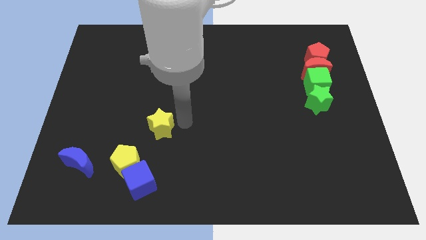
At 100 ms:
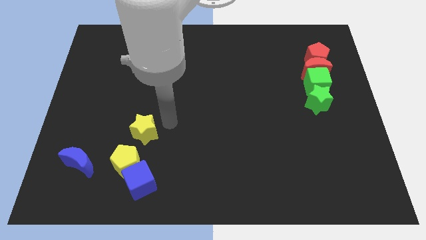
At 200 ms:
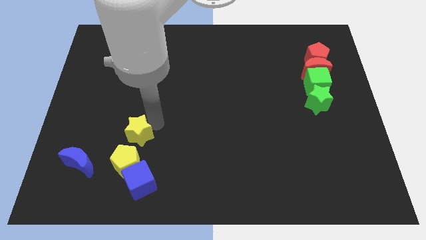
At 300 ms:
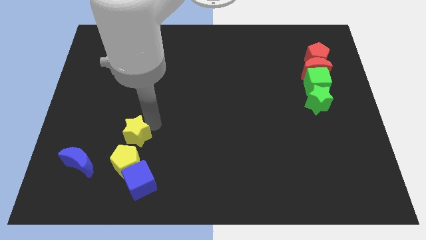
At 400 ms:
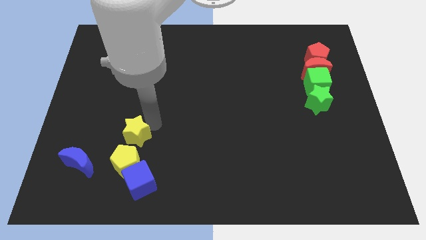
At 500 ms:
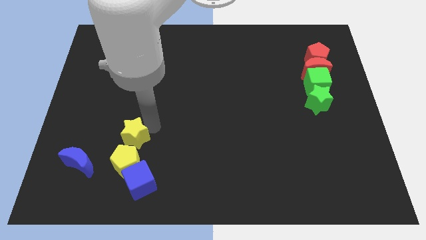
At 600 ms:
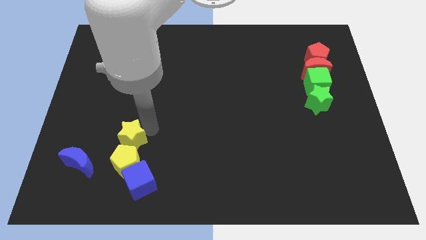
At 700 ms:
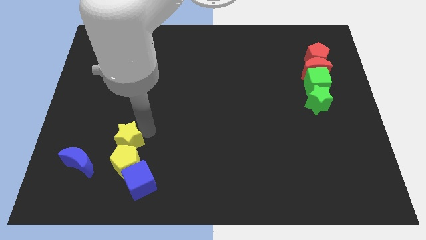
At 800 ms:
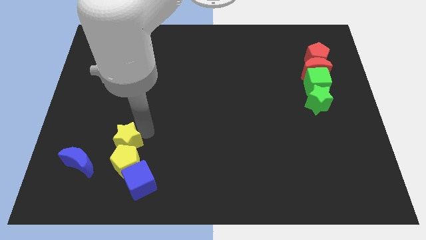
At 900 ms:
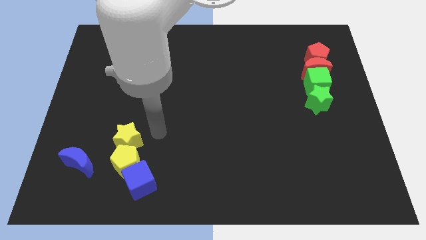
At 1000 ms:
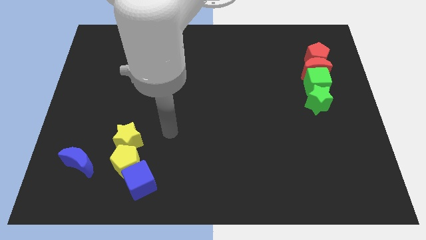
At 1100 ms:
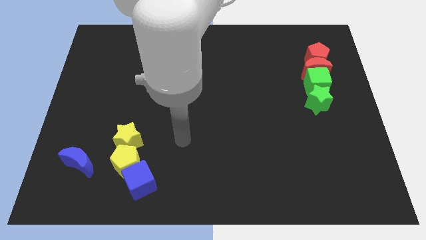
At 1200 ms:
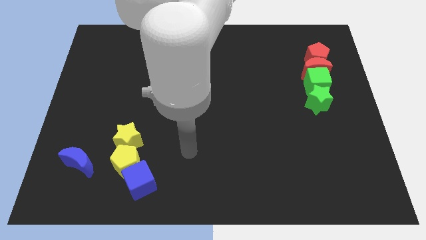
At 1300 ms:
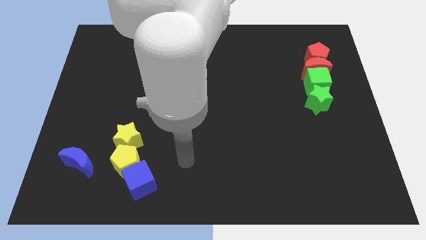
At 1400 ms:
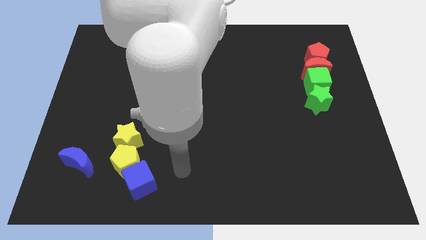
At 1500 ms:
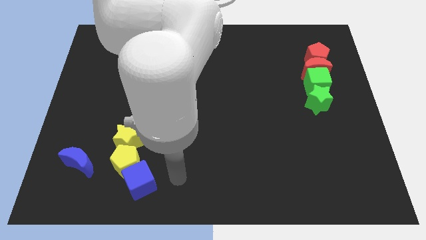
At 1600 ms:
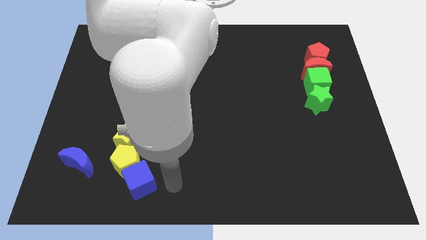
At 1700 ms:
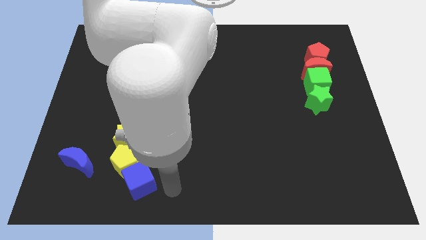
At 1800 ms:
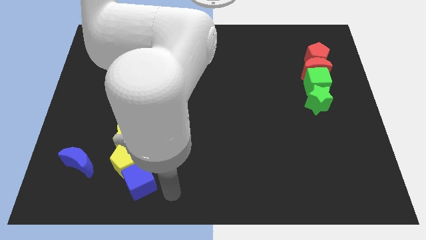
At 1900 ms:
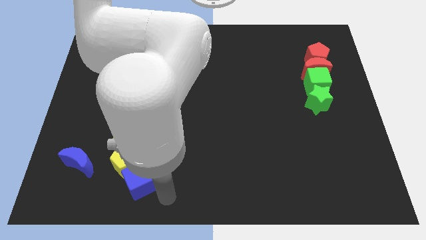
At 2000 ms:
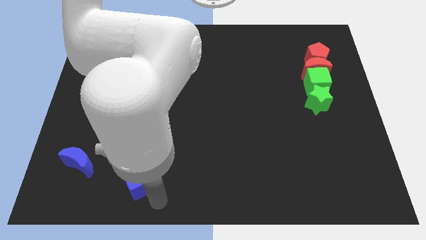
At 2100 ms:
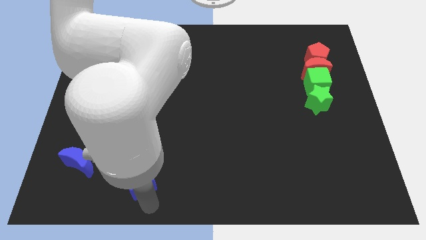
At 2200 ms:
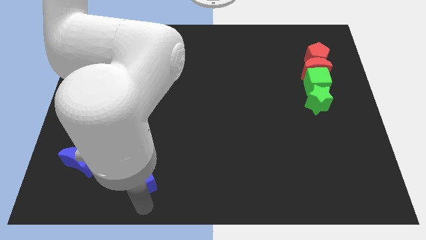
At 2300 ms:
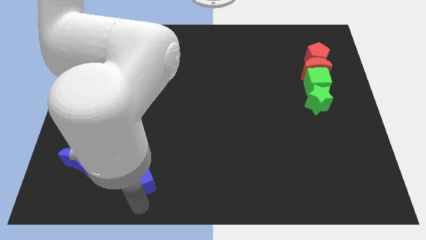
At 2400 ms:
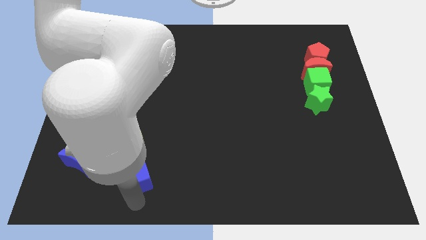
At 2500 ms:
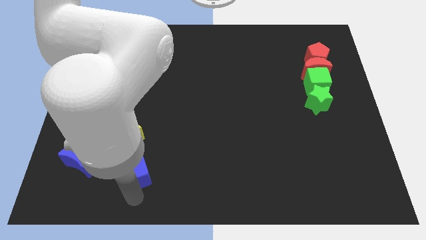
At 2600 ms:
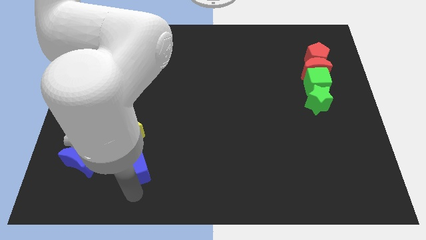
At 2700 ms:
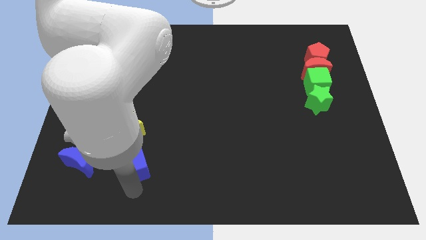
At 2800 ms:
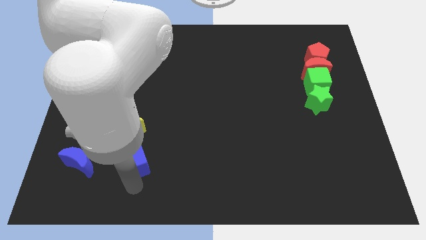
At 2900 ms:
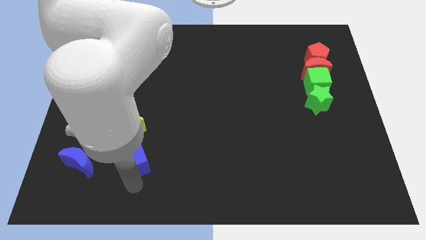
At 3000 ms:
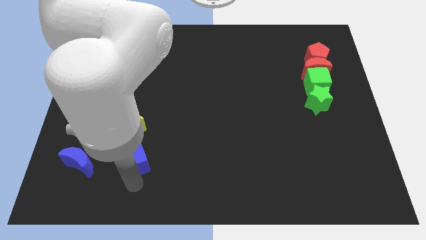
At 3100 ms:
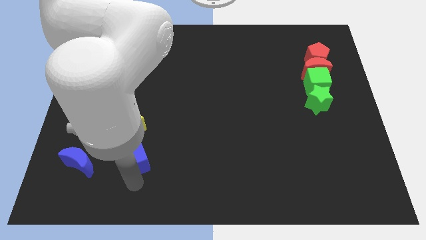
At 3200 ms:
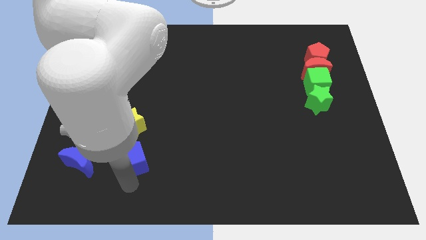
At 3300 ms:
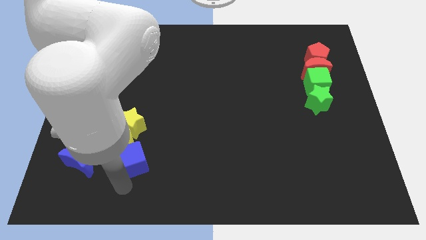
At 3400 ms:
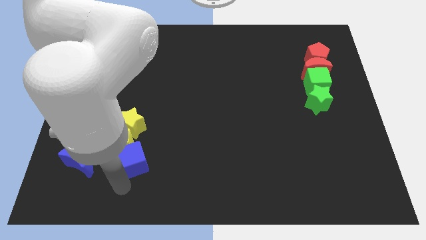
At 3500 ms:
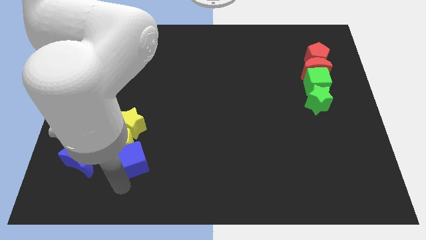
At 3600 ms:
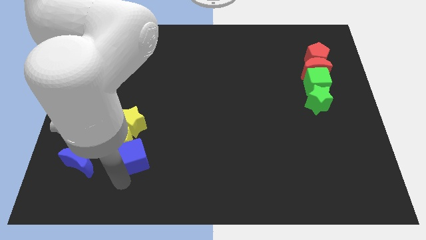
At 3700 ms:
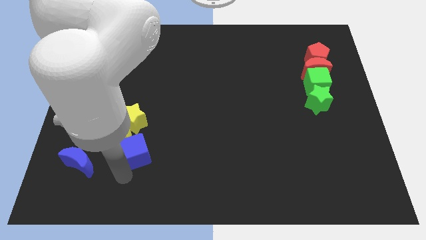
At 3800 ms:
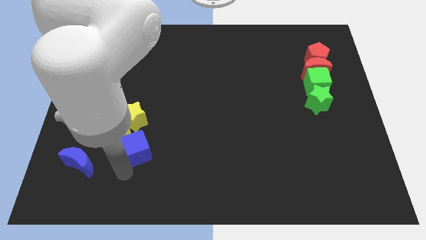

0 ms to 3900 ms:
push blue cube slightly towards up

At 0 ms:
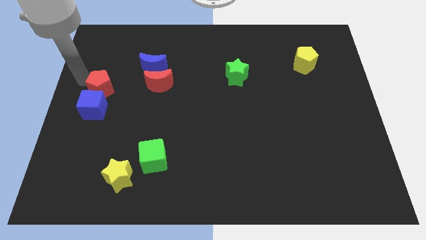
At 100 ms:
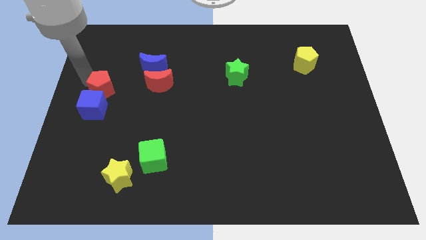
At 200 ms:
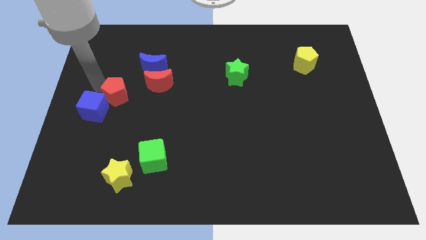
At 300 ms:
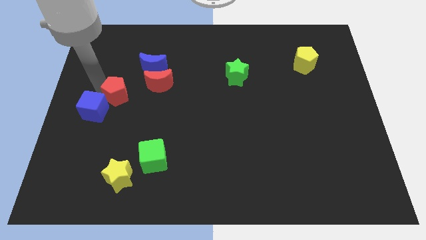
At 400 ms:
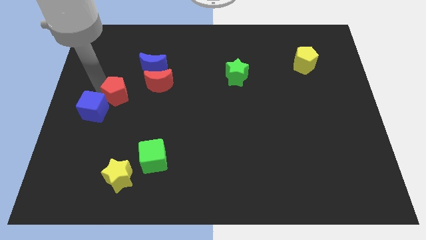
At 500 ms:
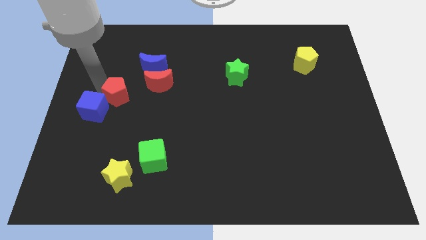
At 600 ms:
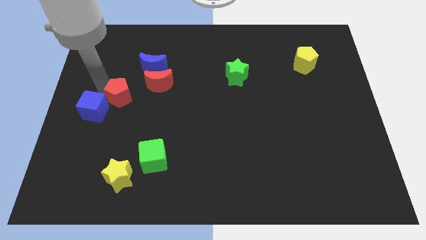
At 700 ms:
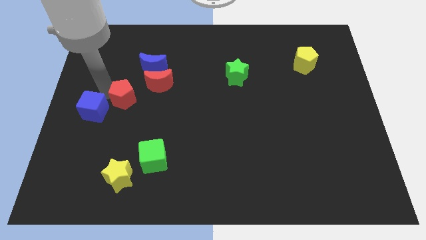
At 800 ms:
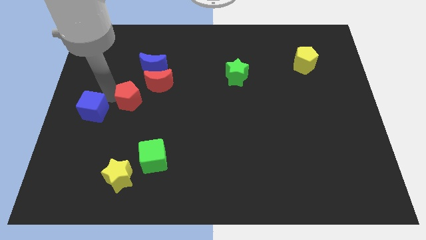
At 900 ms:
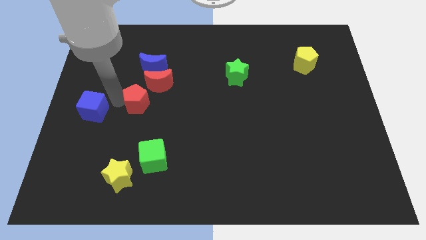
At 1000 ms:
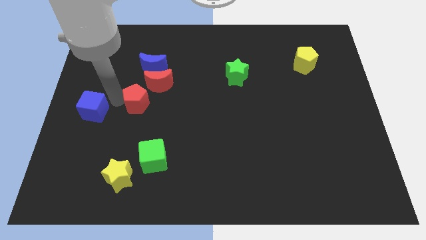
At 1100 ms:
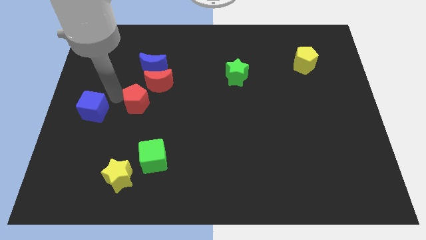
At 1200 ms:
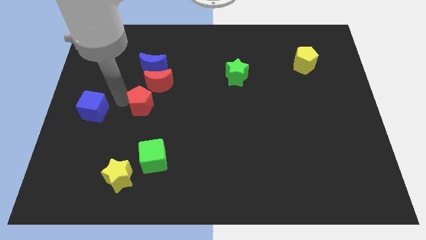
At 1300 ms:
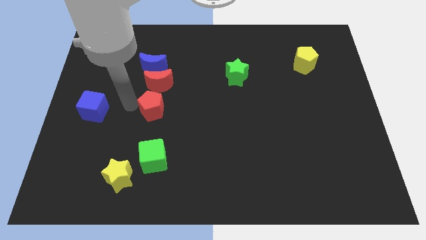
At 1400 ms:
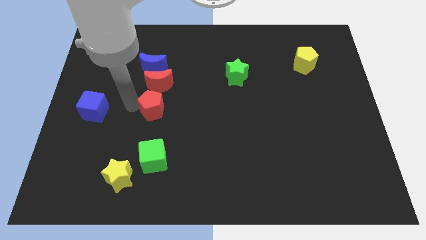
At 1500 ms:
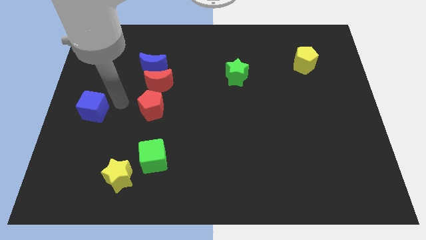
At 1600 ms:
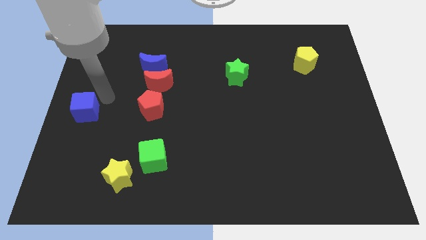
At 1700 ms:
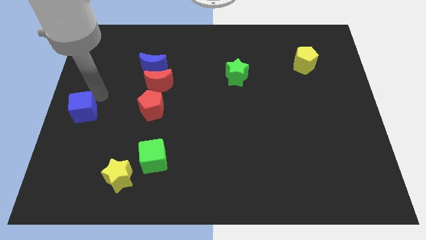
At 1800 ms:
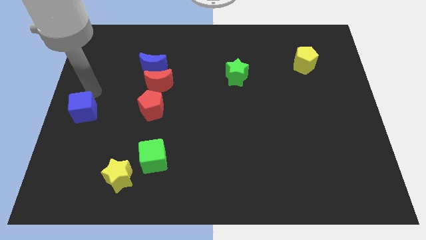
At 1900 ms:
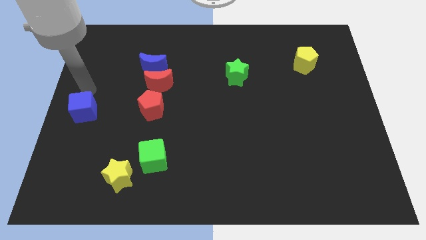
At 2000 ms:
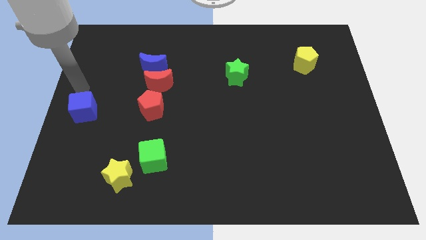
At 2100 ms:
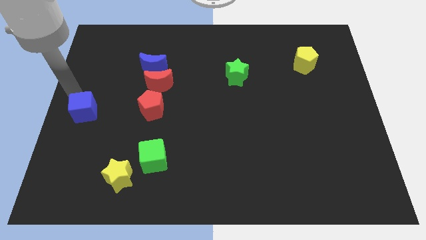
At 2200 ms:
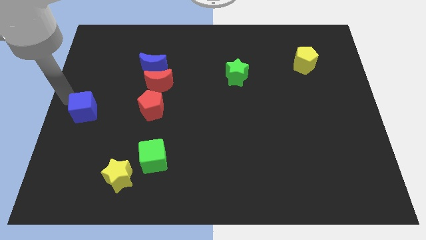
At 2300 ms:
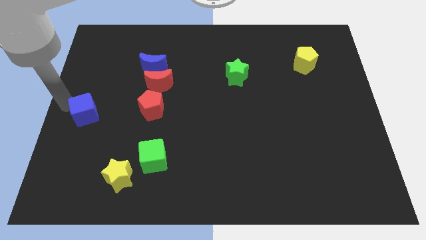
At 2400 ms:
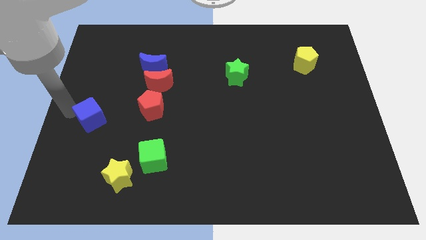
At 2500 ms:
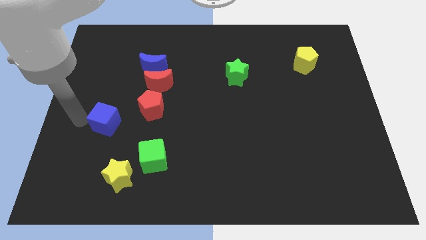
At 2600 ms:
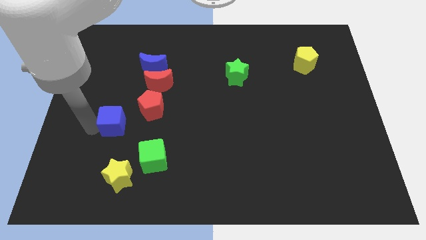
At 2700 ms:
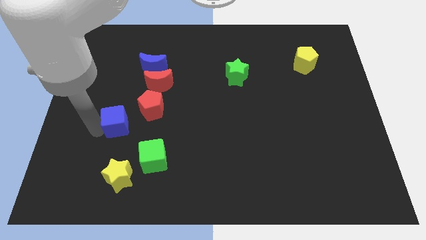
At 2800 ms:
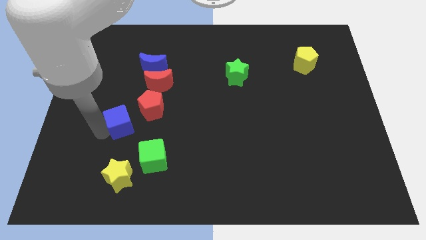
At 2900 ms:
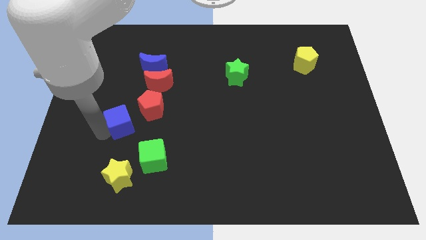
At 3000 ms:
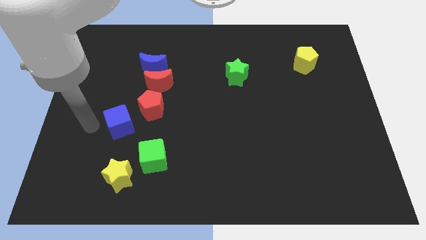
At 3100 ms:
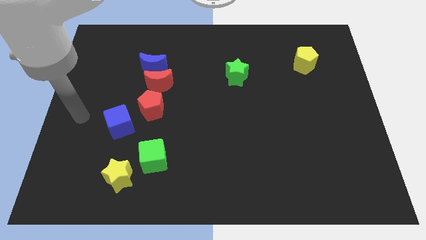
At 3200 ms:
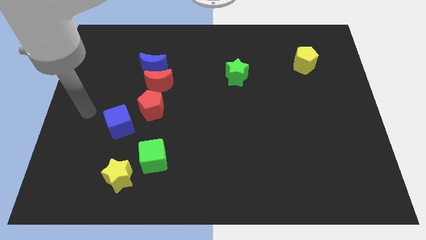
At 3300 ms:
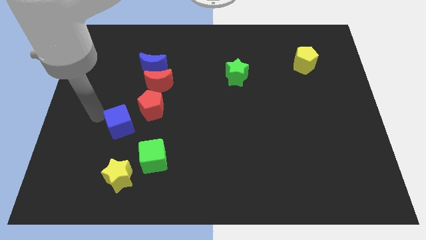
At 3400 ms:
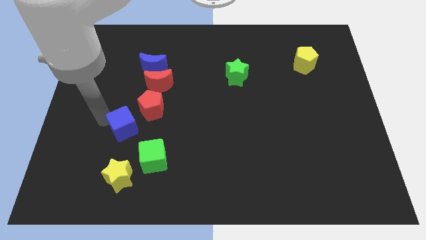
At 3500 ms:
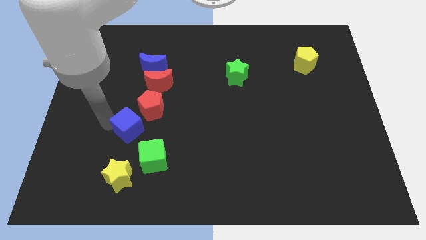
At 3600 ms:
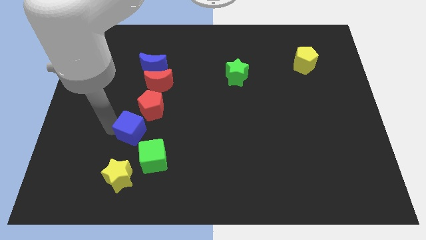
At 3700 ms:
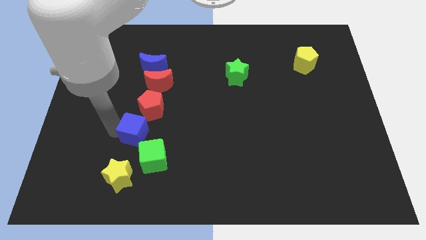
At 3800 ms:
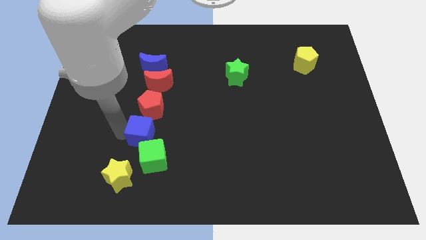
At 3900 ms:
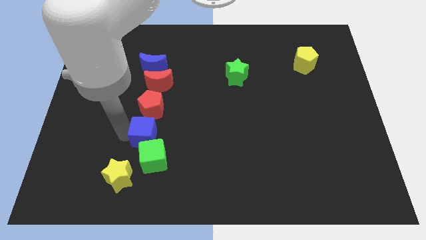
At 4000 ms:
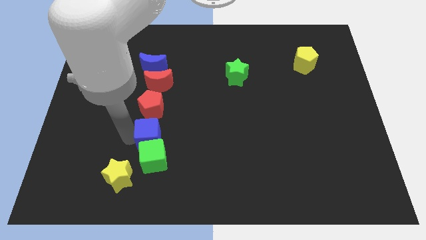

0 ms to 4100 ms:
move the red pentagon and blue cube to the center of the board

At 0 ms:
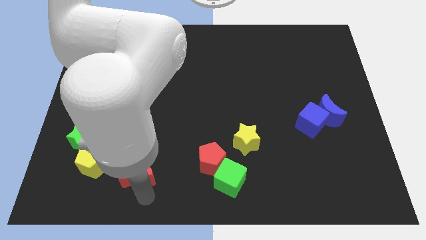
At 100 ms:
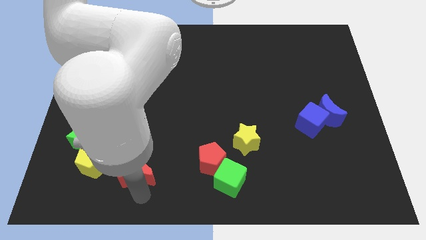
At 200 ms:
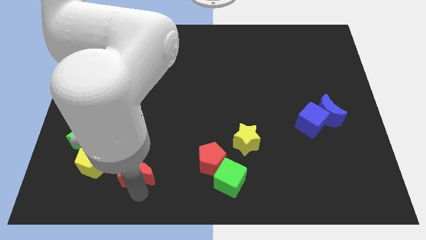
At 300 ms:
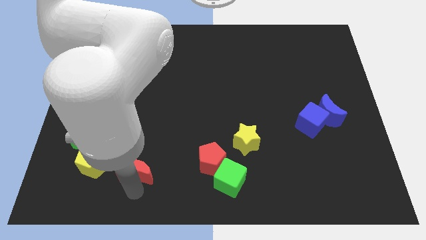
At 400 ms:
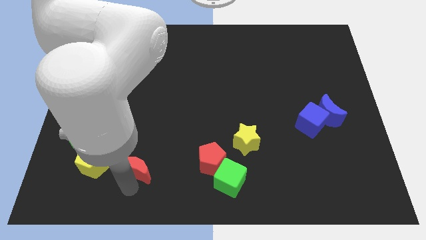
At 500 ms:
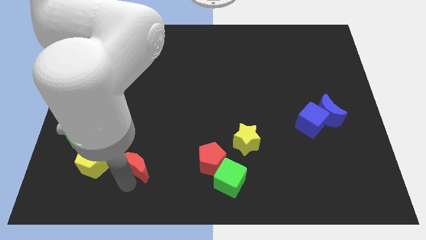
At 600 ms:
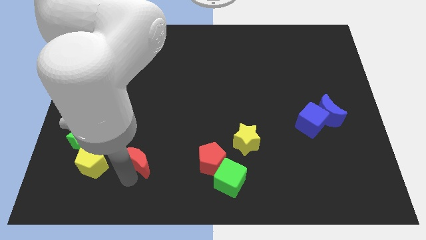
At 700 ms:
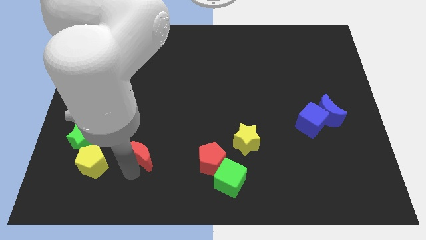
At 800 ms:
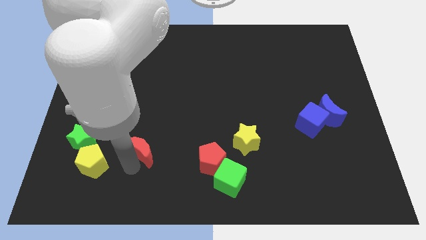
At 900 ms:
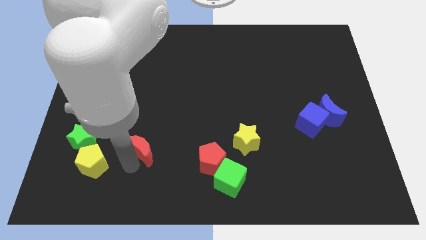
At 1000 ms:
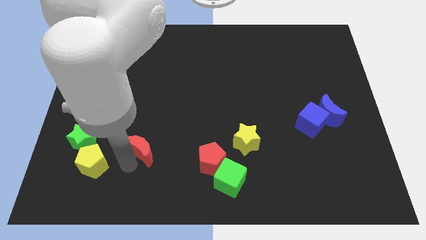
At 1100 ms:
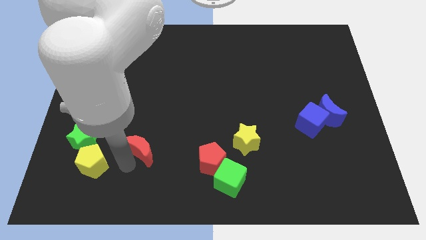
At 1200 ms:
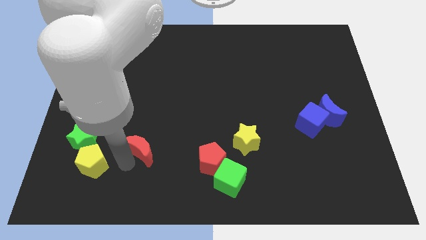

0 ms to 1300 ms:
move red crescent slightly upwards
